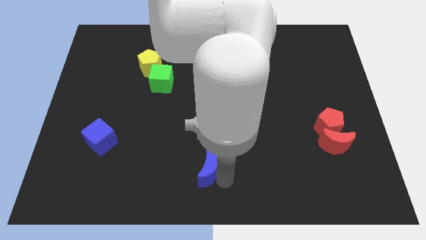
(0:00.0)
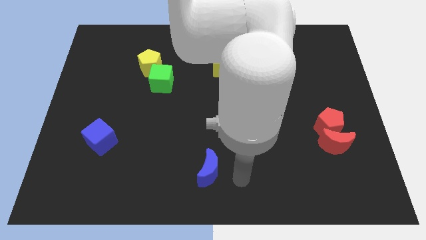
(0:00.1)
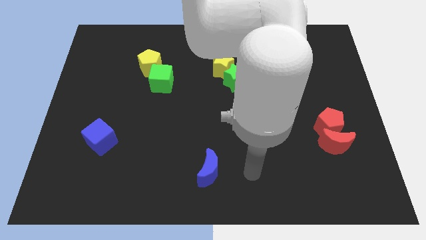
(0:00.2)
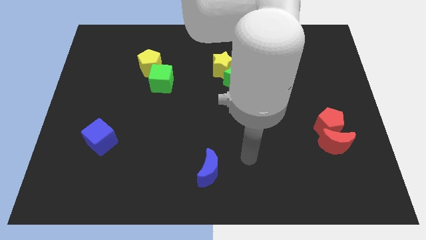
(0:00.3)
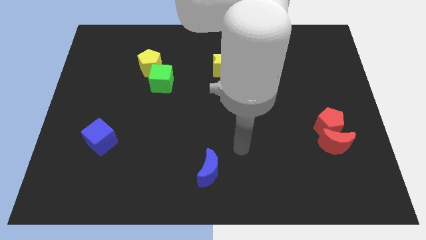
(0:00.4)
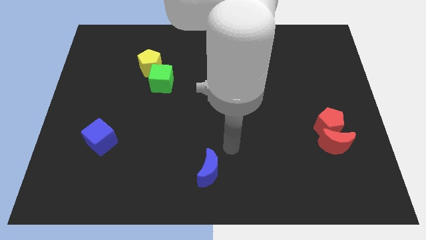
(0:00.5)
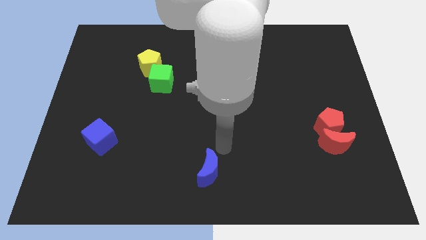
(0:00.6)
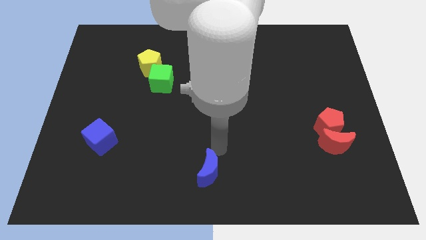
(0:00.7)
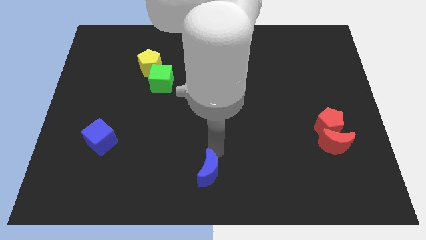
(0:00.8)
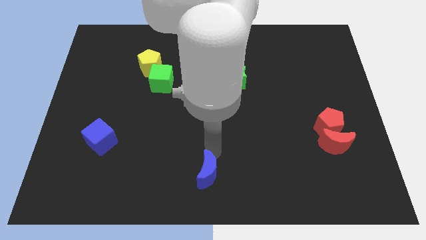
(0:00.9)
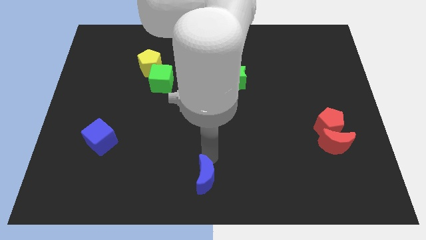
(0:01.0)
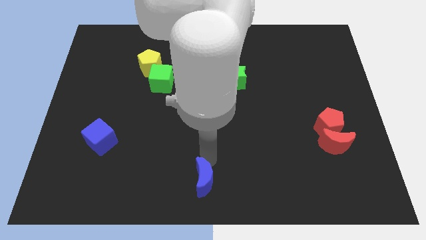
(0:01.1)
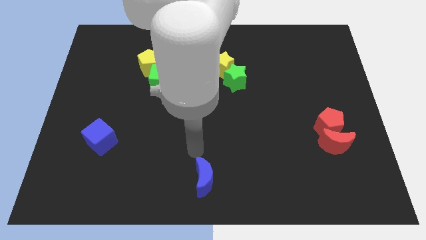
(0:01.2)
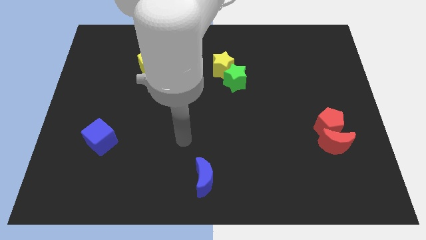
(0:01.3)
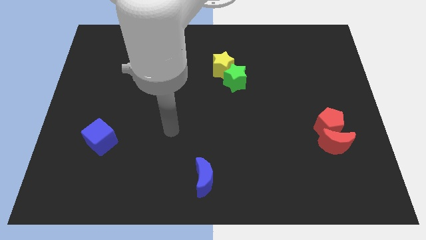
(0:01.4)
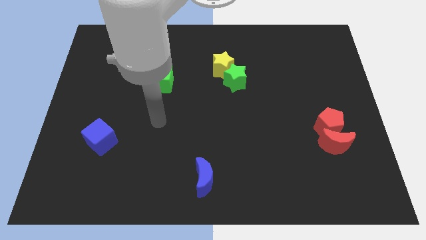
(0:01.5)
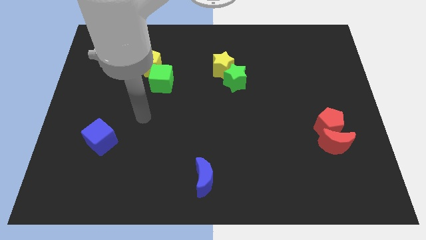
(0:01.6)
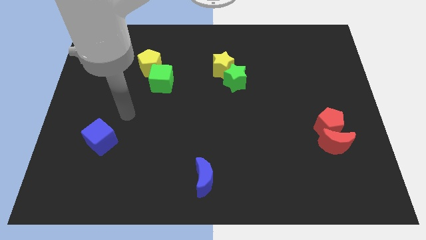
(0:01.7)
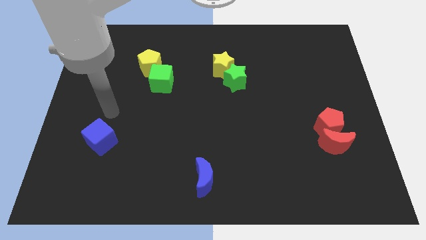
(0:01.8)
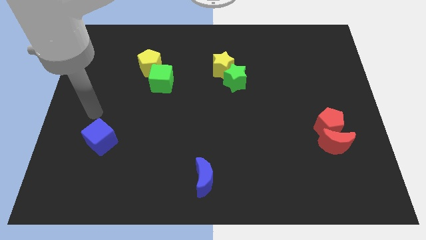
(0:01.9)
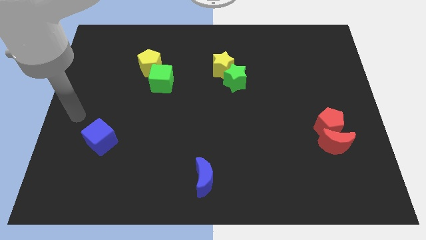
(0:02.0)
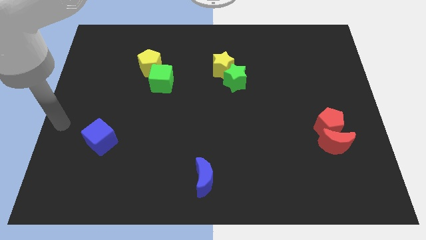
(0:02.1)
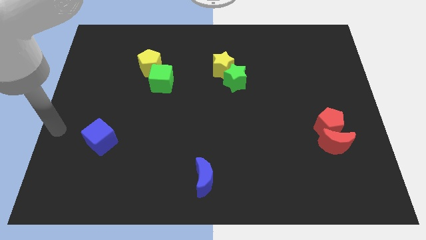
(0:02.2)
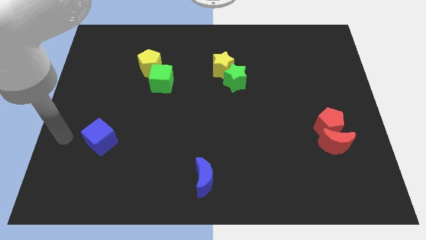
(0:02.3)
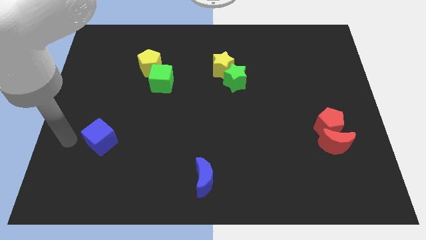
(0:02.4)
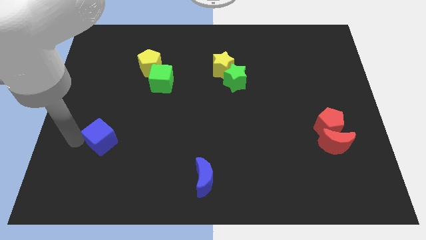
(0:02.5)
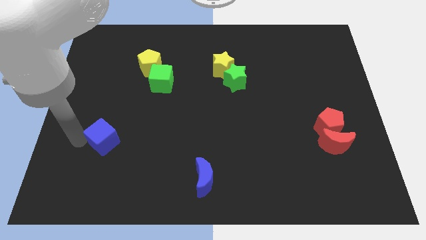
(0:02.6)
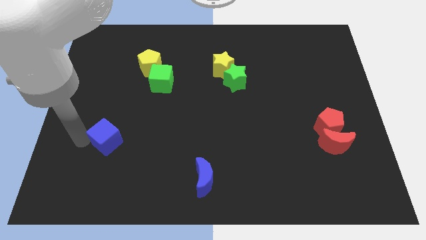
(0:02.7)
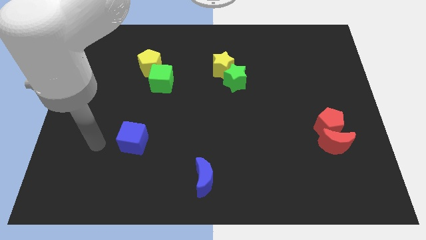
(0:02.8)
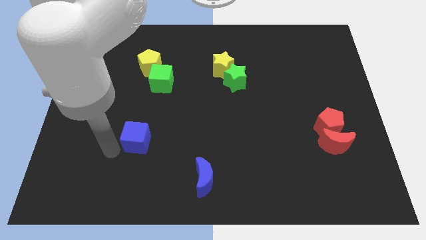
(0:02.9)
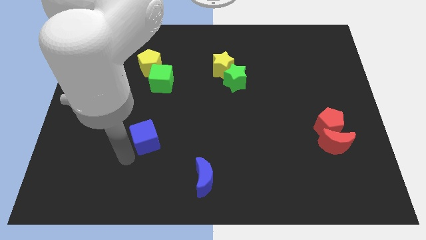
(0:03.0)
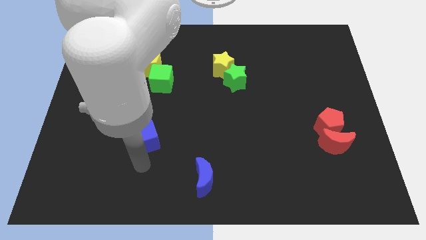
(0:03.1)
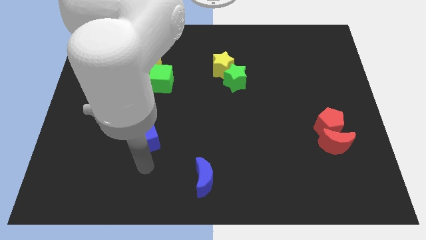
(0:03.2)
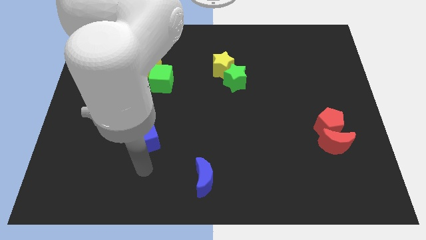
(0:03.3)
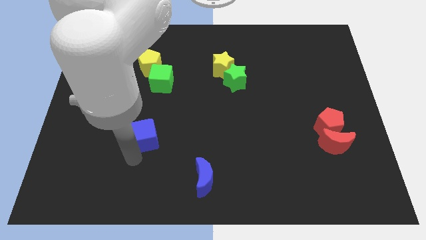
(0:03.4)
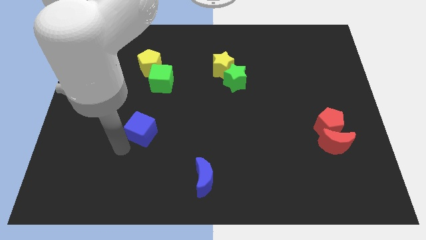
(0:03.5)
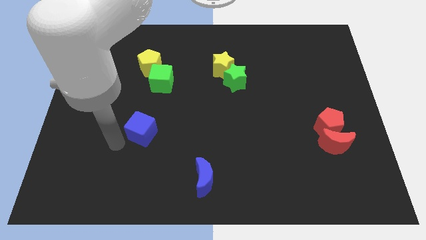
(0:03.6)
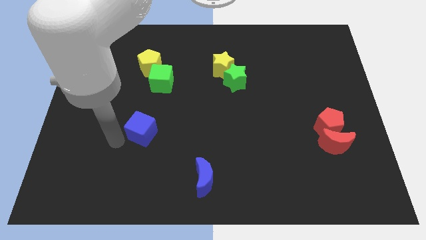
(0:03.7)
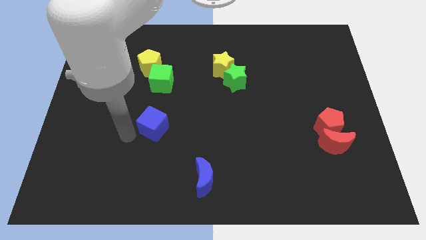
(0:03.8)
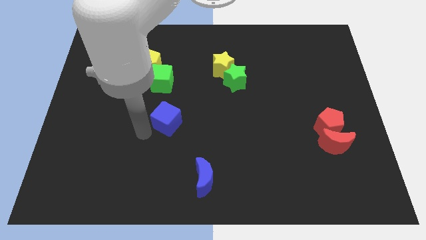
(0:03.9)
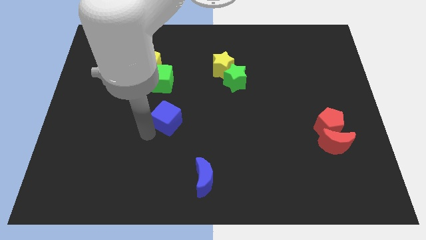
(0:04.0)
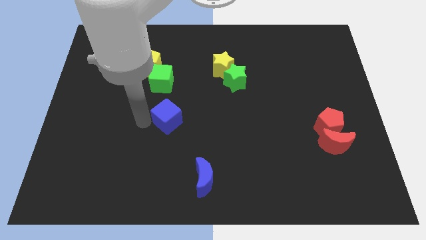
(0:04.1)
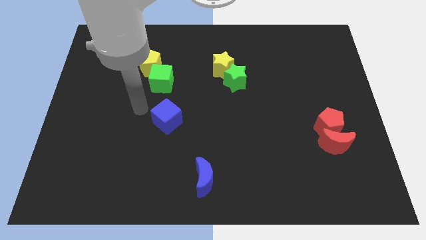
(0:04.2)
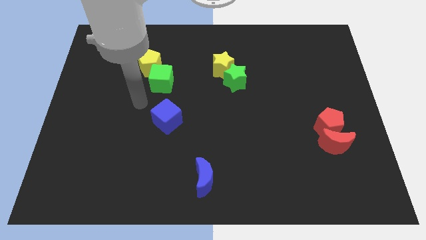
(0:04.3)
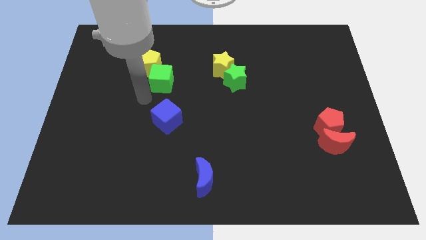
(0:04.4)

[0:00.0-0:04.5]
place the blue cube below the green cube

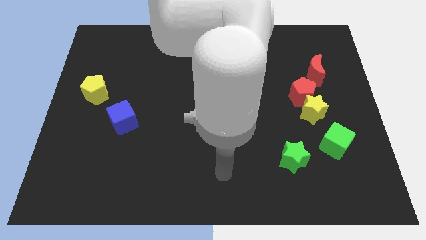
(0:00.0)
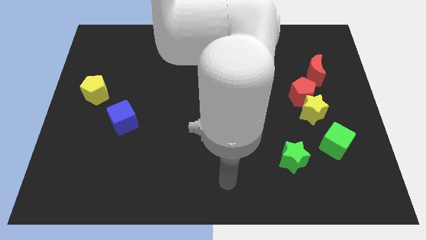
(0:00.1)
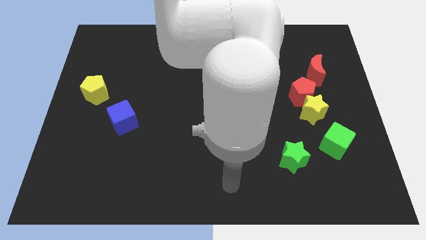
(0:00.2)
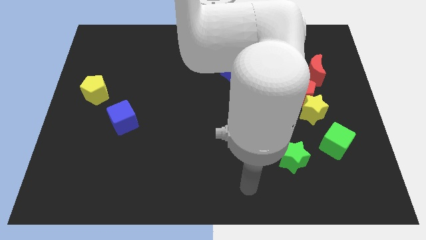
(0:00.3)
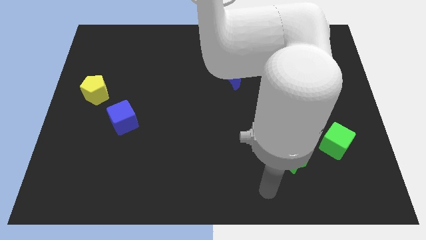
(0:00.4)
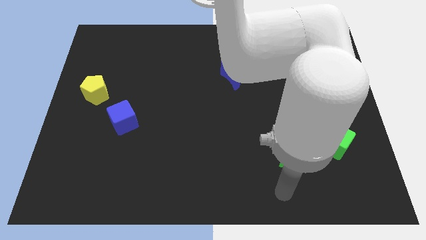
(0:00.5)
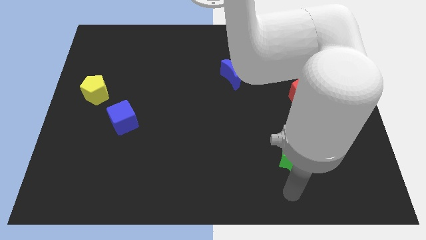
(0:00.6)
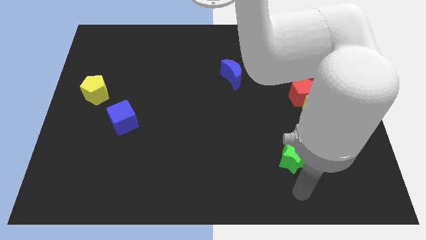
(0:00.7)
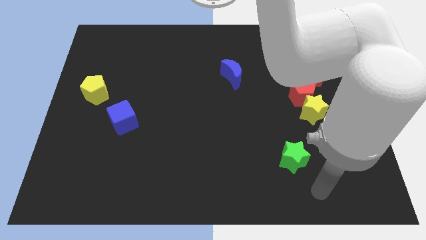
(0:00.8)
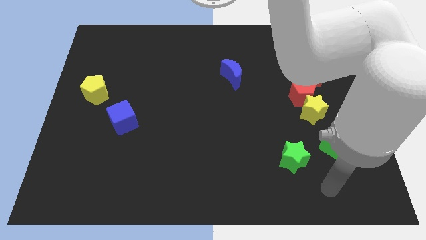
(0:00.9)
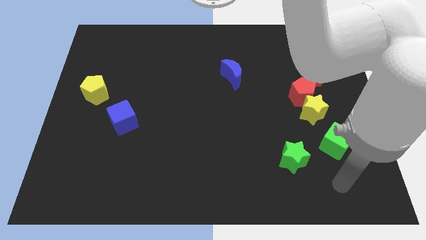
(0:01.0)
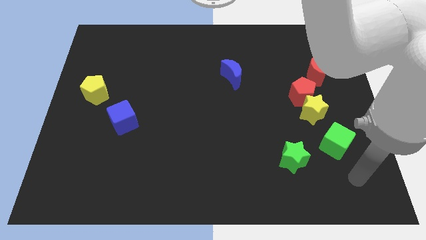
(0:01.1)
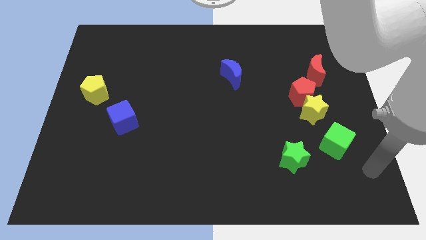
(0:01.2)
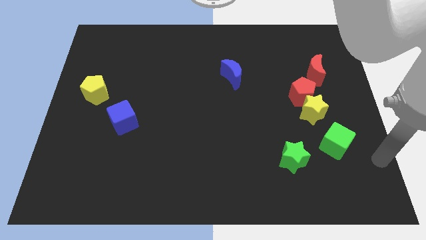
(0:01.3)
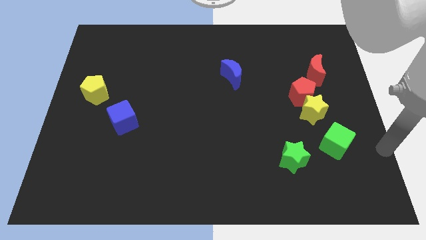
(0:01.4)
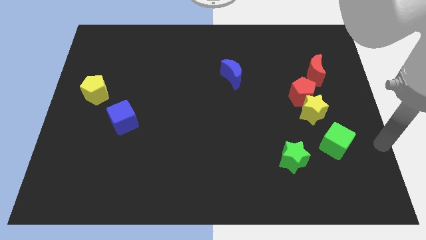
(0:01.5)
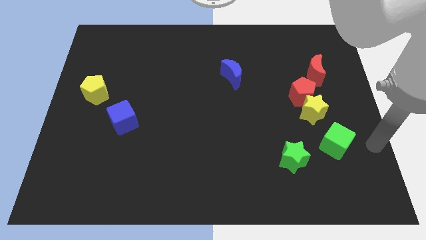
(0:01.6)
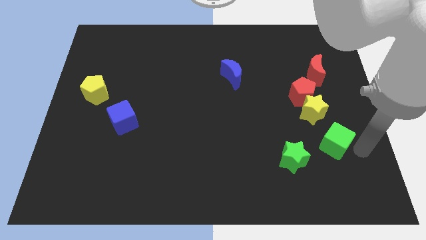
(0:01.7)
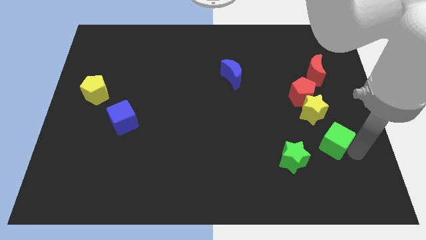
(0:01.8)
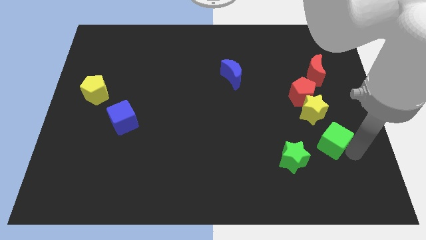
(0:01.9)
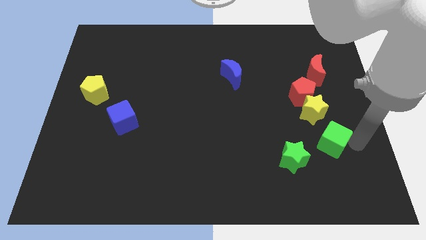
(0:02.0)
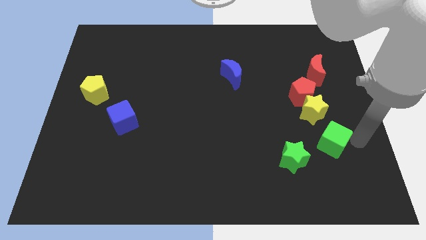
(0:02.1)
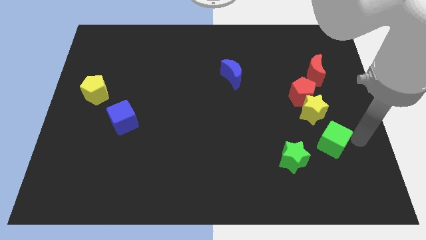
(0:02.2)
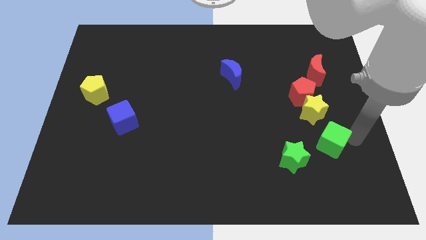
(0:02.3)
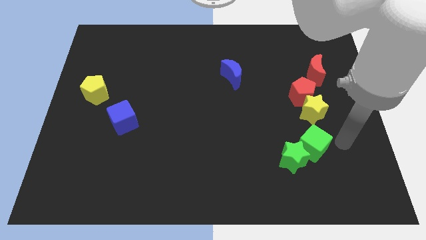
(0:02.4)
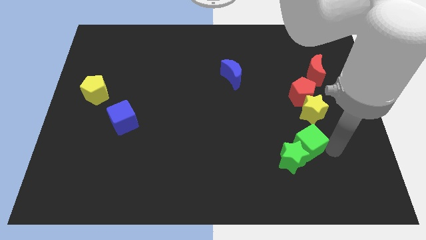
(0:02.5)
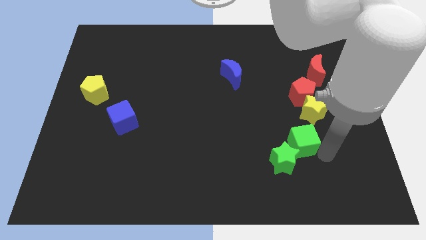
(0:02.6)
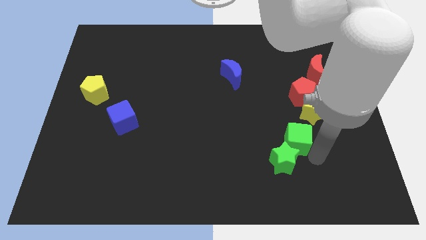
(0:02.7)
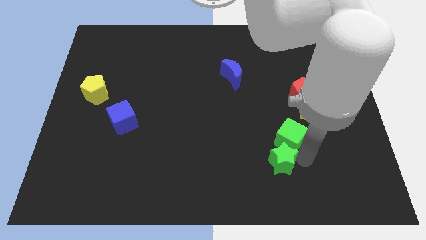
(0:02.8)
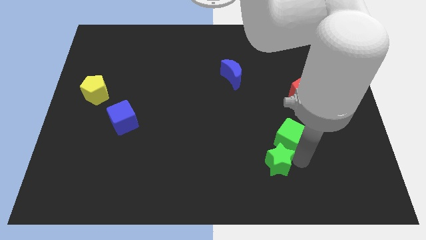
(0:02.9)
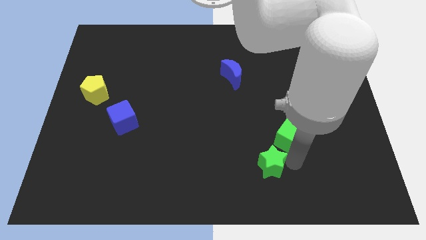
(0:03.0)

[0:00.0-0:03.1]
push green cube to the top of the green star

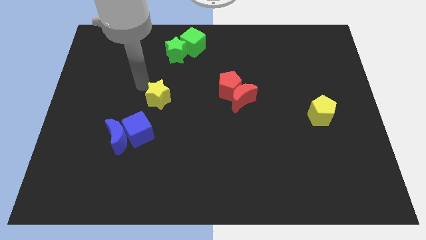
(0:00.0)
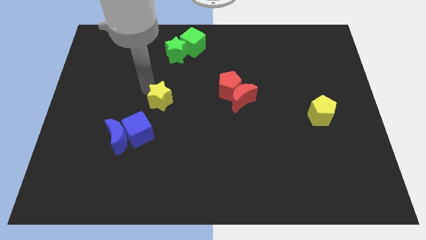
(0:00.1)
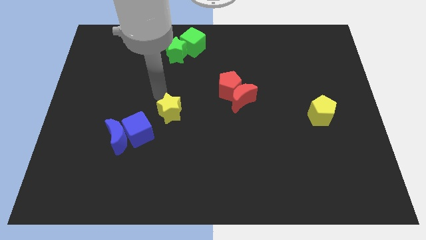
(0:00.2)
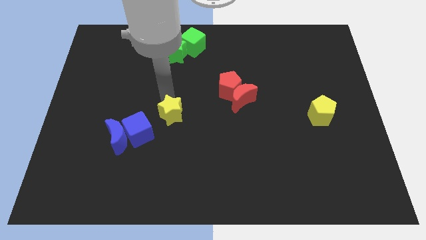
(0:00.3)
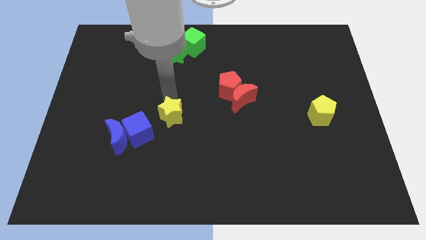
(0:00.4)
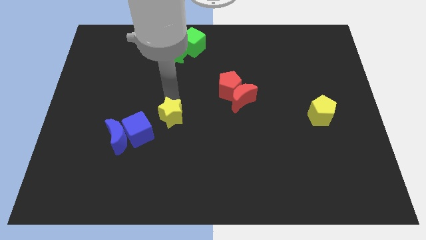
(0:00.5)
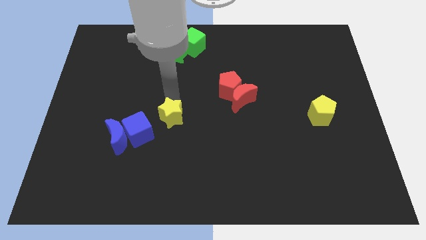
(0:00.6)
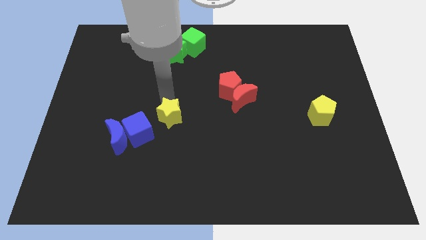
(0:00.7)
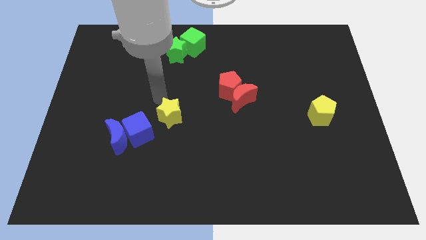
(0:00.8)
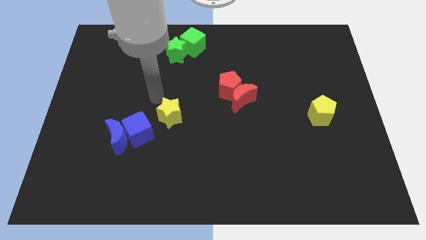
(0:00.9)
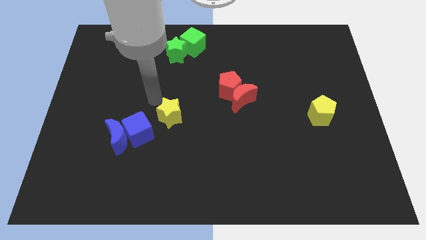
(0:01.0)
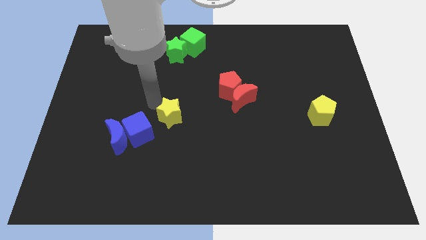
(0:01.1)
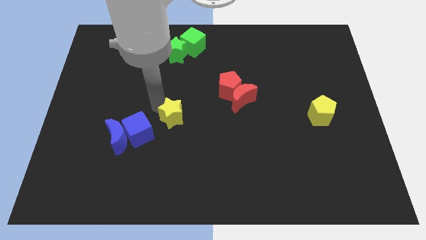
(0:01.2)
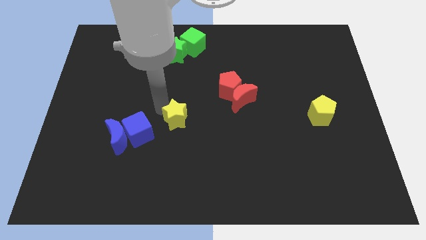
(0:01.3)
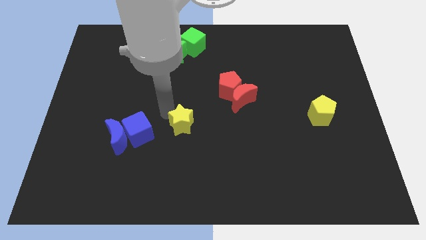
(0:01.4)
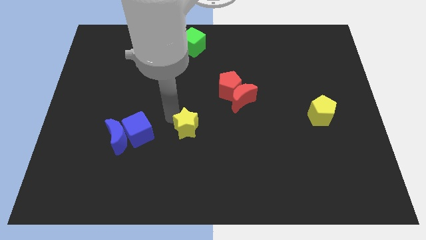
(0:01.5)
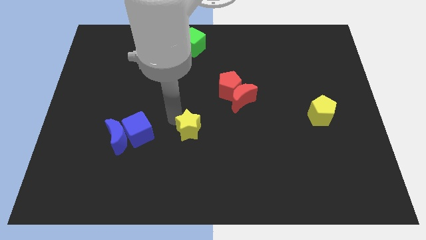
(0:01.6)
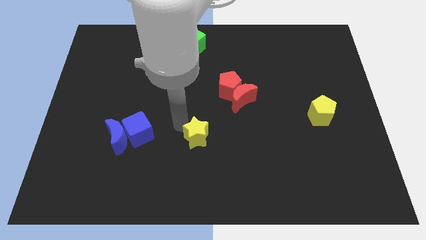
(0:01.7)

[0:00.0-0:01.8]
move the yellow star towards the bottom side of the board
